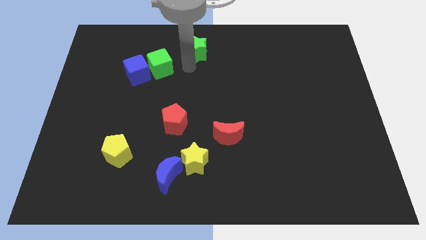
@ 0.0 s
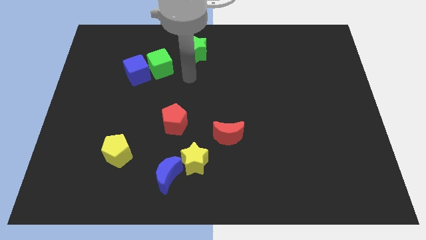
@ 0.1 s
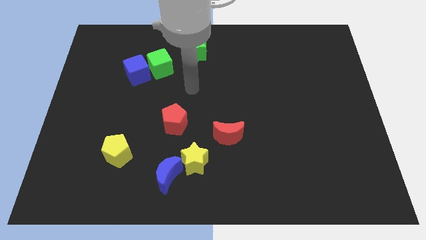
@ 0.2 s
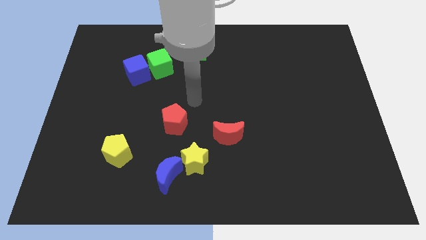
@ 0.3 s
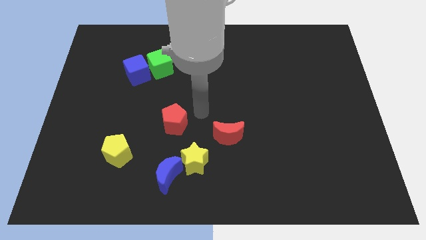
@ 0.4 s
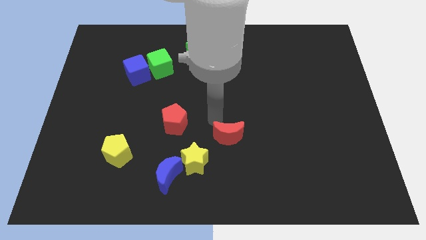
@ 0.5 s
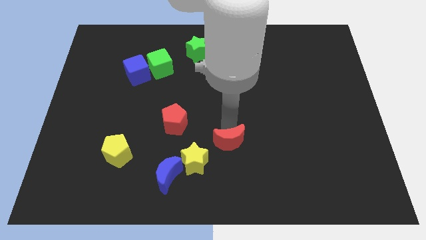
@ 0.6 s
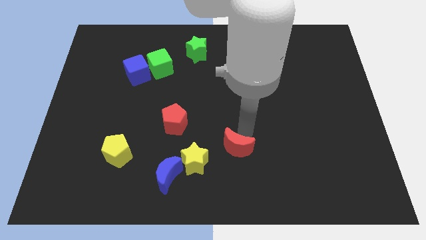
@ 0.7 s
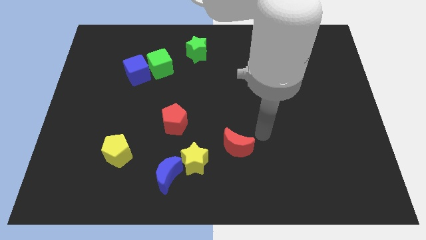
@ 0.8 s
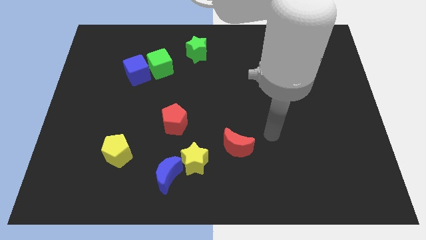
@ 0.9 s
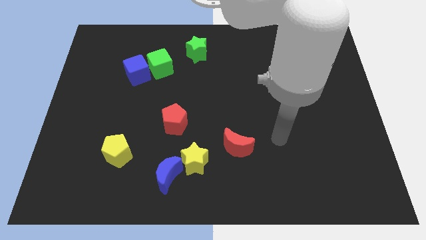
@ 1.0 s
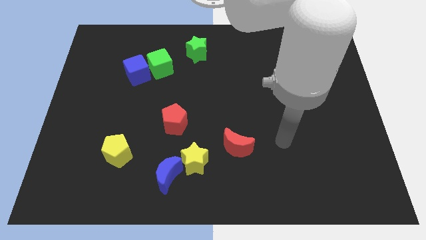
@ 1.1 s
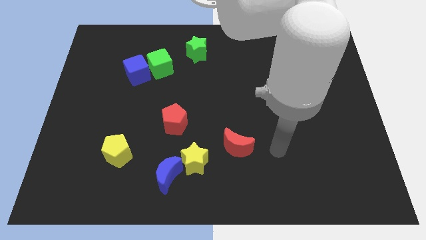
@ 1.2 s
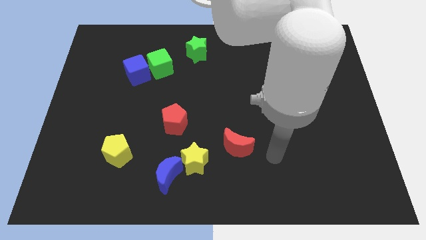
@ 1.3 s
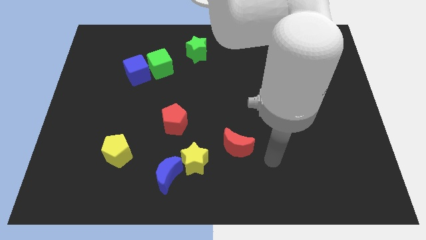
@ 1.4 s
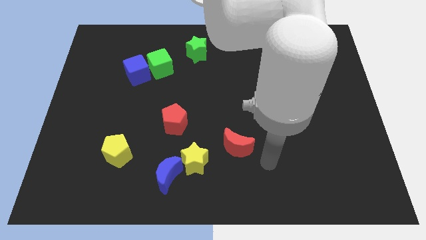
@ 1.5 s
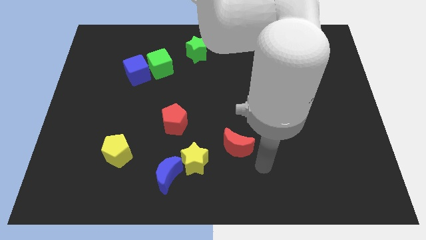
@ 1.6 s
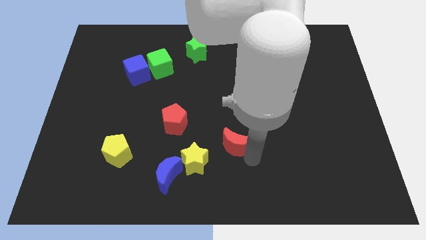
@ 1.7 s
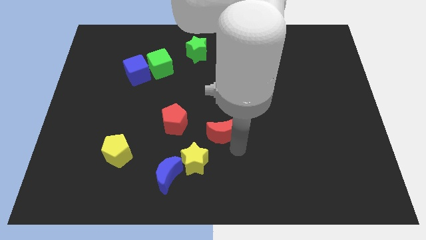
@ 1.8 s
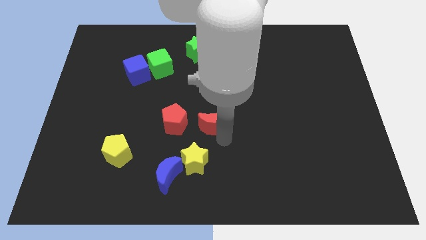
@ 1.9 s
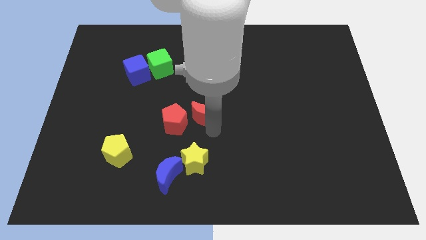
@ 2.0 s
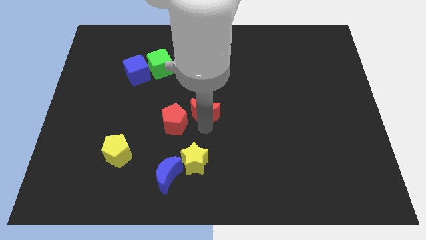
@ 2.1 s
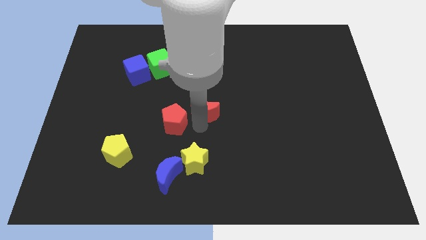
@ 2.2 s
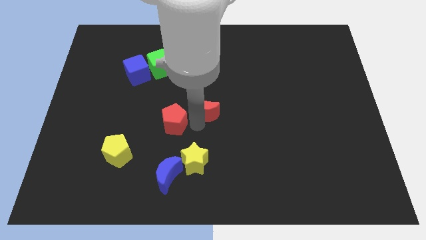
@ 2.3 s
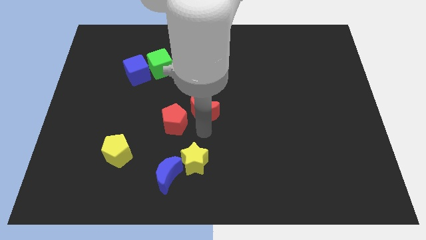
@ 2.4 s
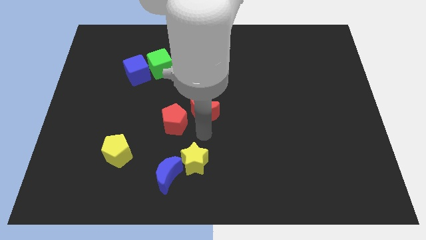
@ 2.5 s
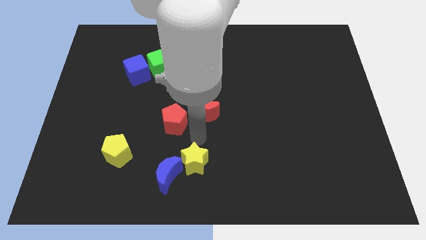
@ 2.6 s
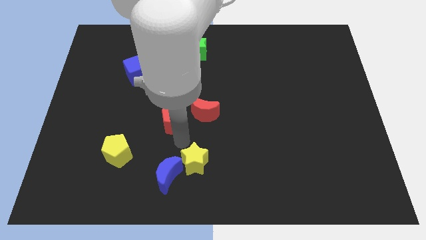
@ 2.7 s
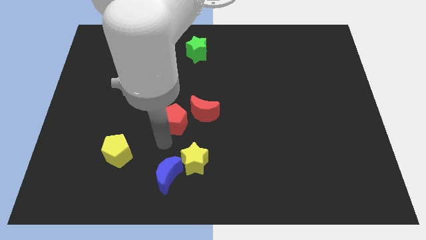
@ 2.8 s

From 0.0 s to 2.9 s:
place the red moon in between the green star and yellow star

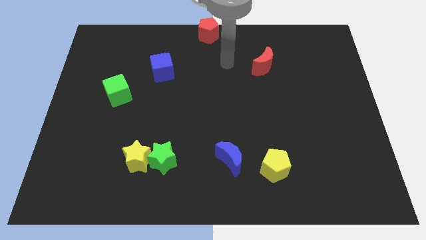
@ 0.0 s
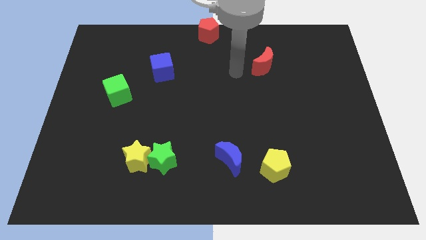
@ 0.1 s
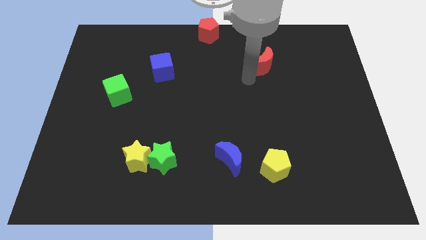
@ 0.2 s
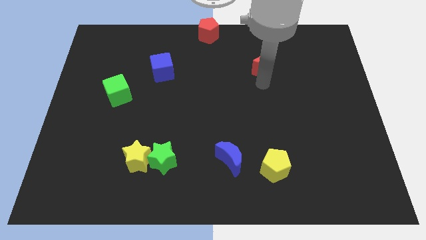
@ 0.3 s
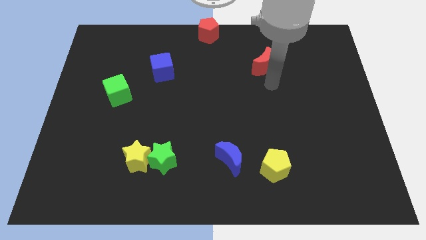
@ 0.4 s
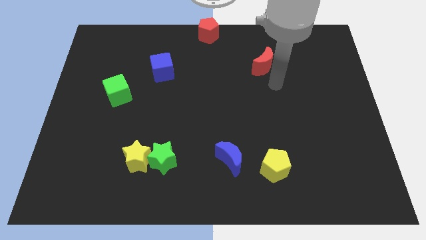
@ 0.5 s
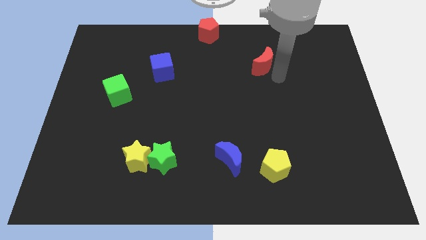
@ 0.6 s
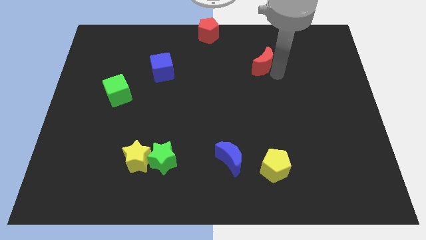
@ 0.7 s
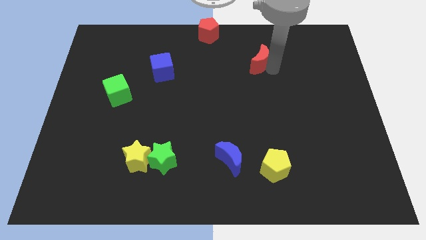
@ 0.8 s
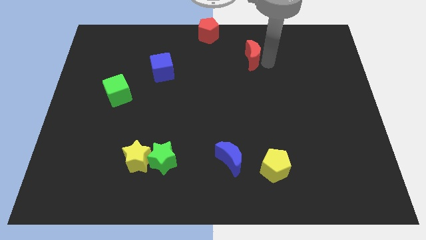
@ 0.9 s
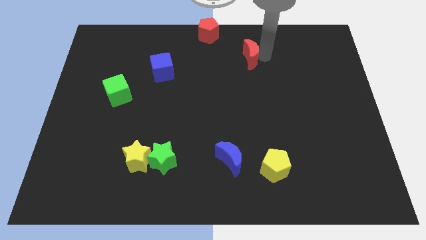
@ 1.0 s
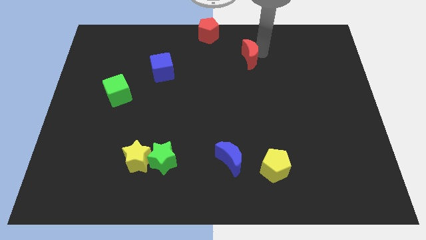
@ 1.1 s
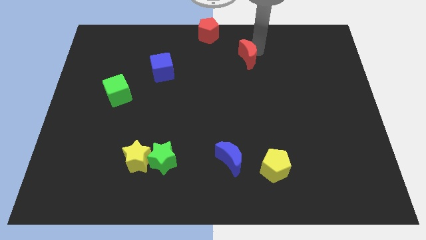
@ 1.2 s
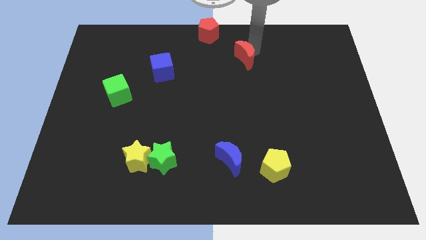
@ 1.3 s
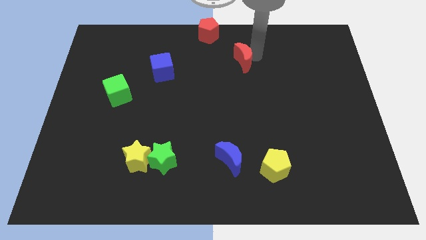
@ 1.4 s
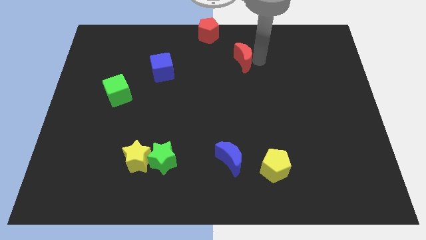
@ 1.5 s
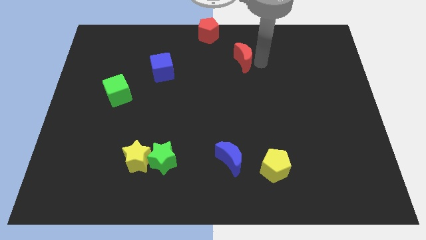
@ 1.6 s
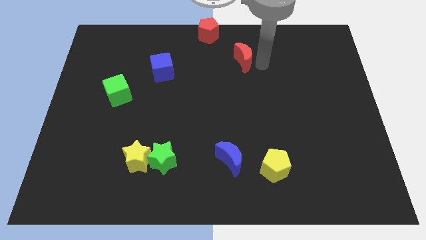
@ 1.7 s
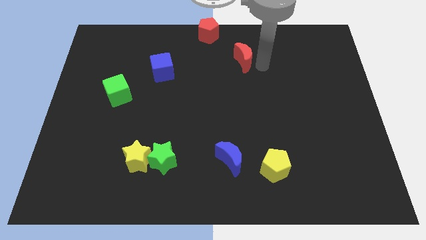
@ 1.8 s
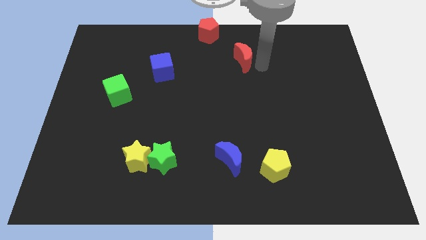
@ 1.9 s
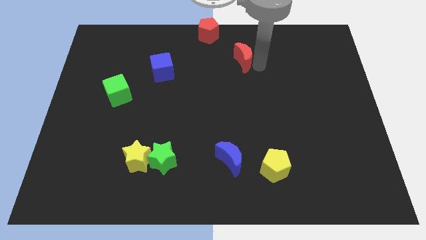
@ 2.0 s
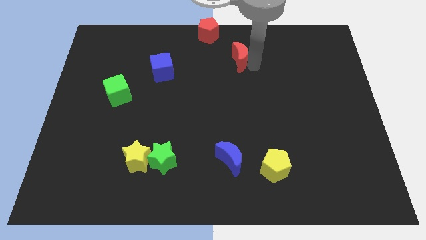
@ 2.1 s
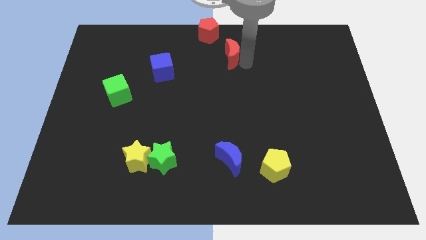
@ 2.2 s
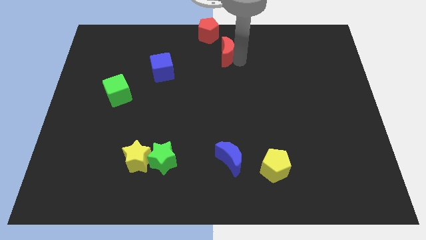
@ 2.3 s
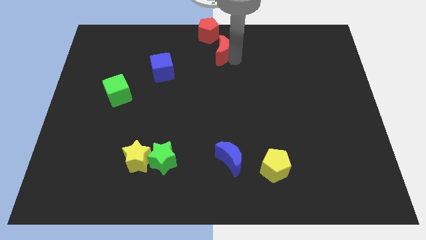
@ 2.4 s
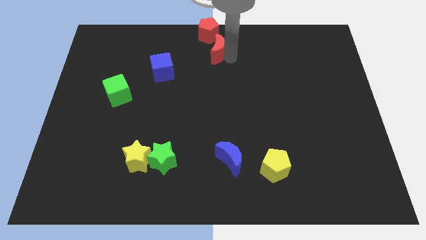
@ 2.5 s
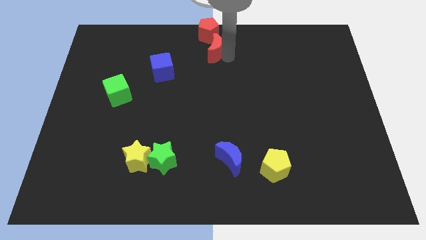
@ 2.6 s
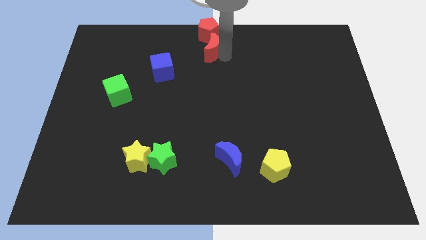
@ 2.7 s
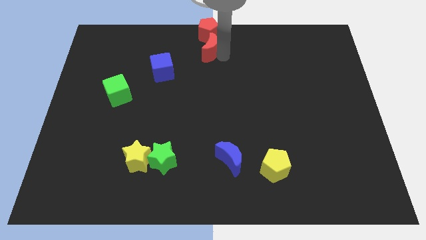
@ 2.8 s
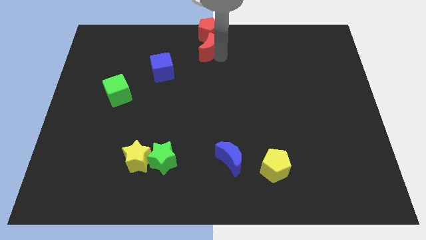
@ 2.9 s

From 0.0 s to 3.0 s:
place red crescent at the bottom of red pentagon

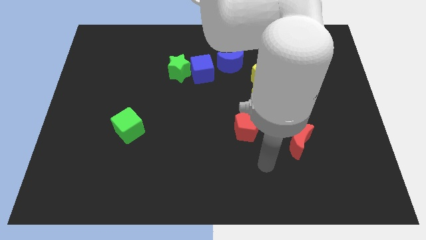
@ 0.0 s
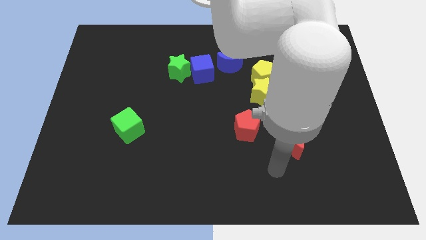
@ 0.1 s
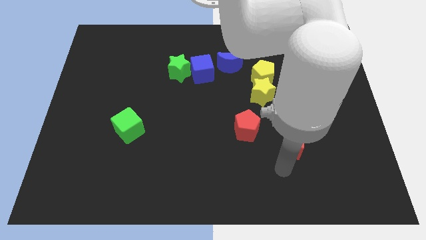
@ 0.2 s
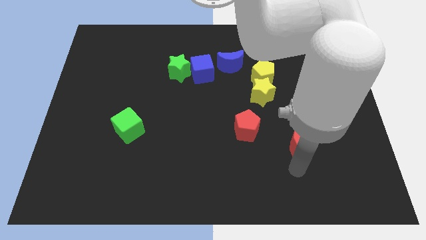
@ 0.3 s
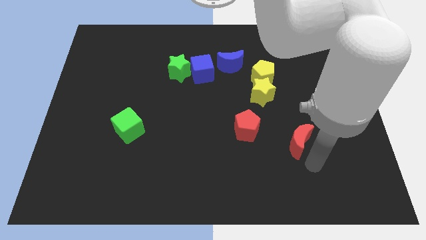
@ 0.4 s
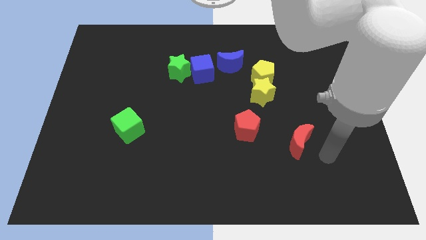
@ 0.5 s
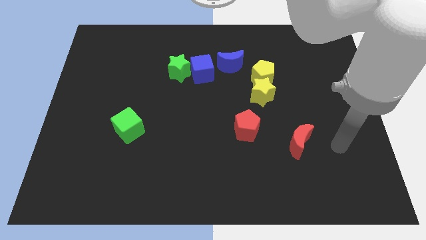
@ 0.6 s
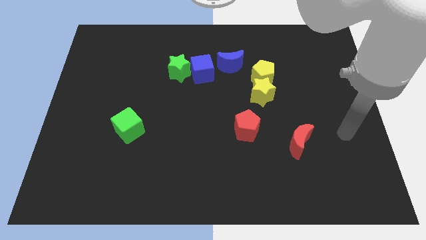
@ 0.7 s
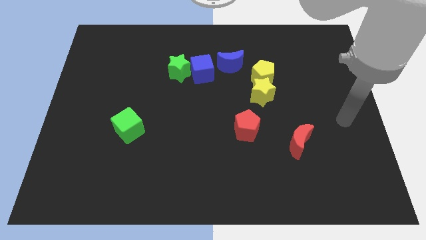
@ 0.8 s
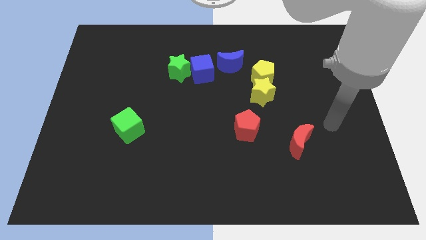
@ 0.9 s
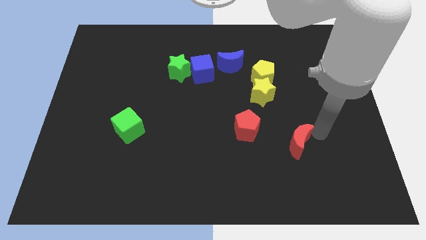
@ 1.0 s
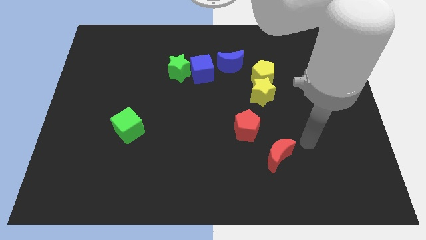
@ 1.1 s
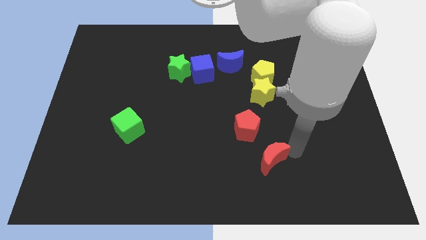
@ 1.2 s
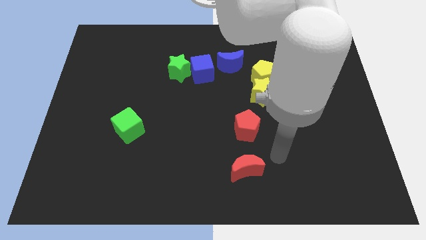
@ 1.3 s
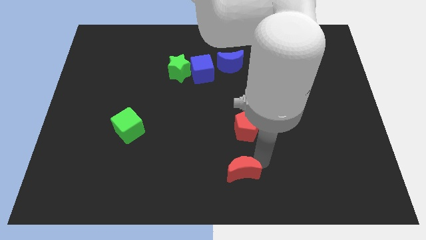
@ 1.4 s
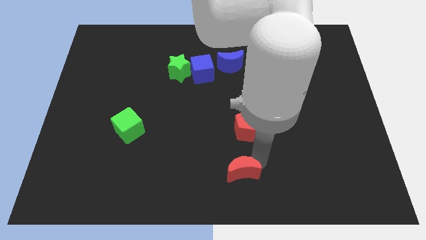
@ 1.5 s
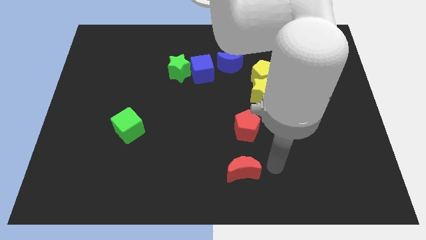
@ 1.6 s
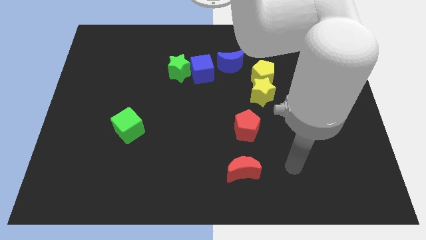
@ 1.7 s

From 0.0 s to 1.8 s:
place the red moon below red pentagon

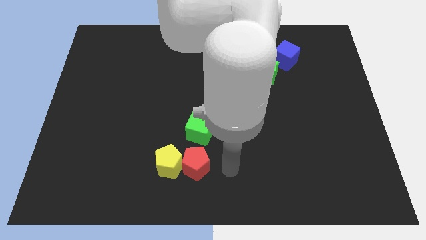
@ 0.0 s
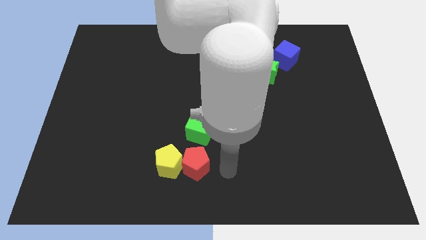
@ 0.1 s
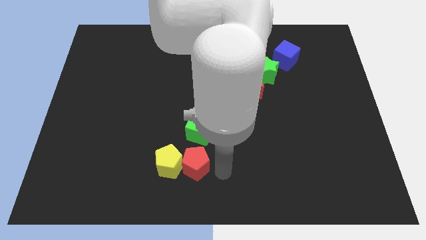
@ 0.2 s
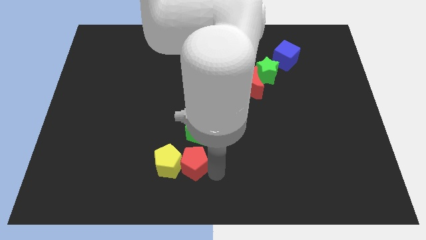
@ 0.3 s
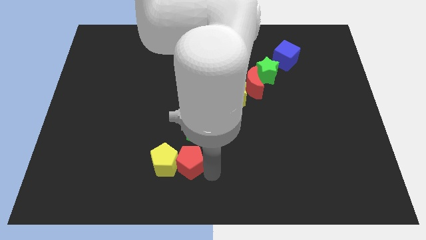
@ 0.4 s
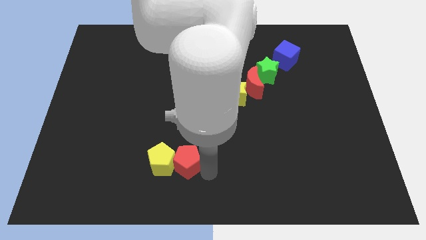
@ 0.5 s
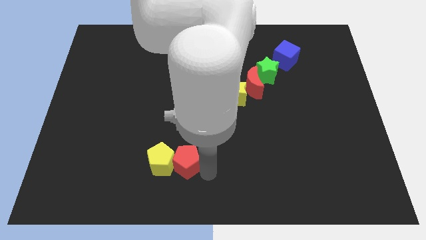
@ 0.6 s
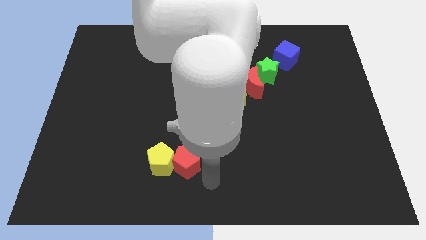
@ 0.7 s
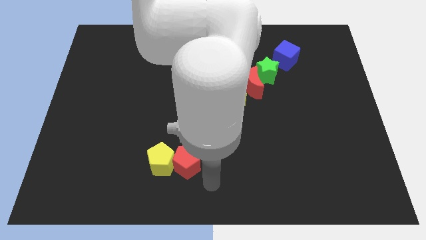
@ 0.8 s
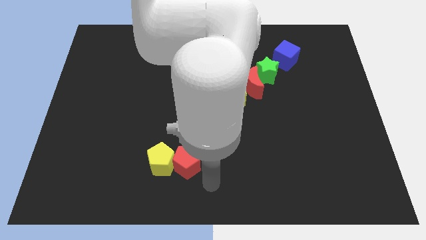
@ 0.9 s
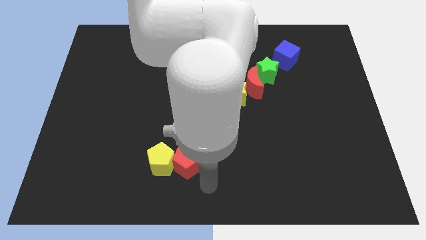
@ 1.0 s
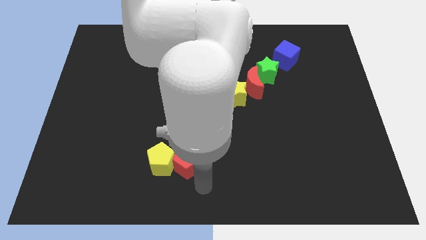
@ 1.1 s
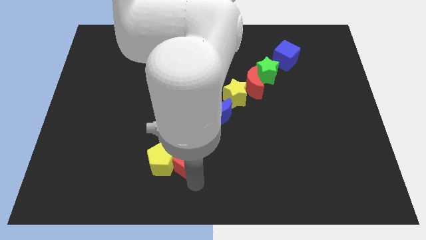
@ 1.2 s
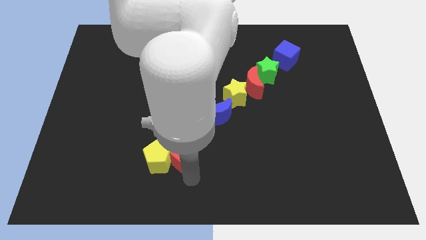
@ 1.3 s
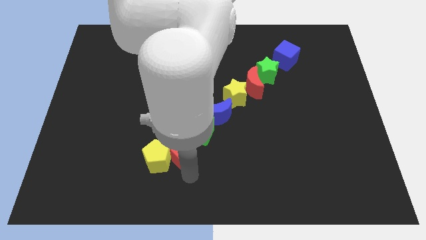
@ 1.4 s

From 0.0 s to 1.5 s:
drag both the pentagon slightly to the left side of the board
